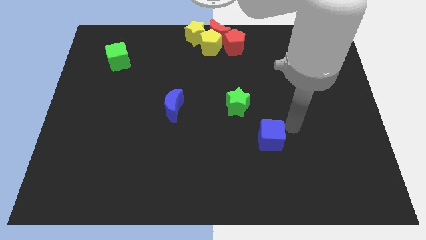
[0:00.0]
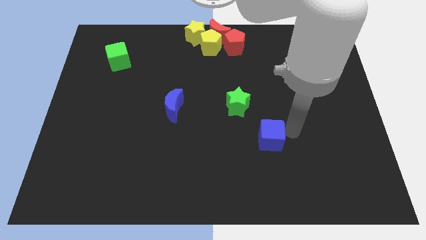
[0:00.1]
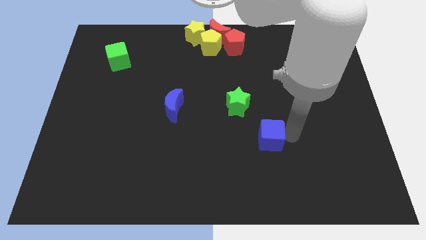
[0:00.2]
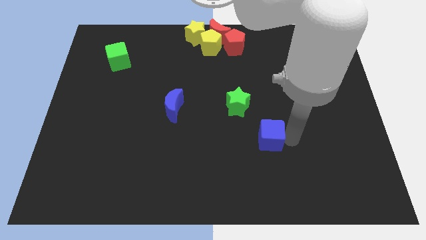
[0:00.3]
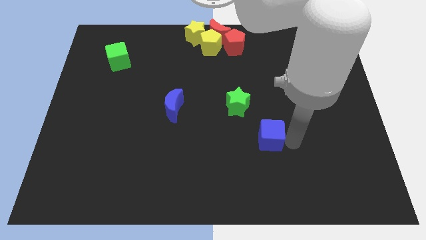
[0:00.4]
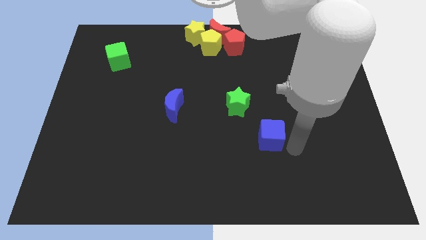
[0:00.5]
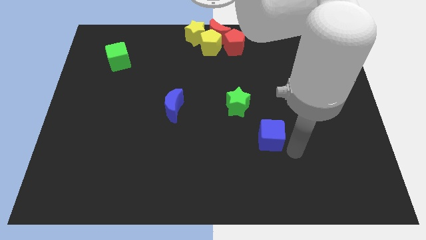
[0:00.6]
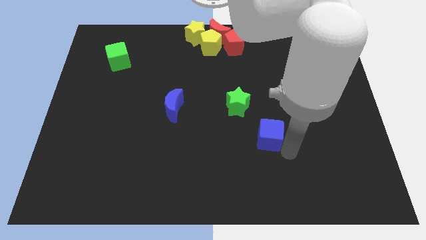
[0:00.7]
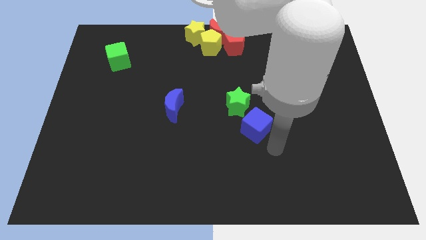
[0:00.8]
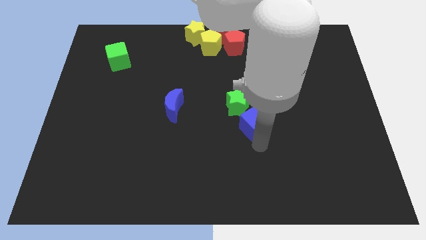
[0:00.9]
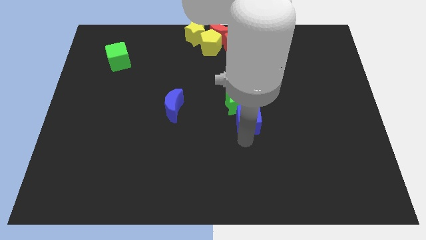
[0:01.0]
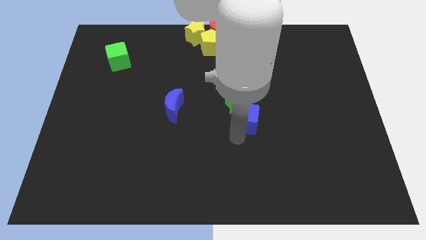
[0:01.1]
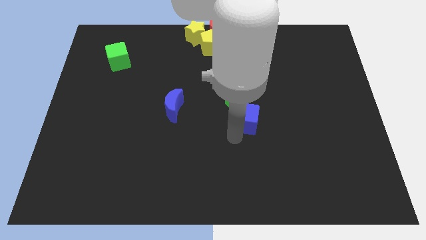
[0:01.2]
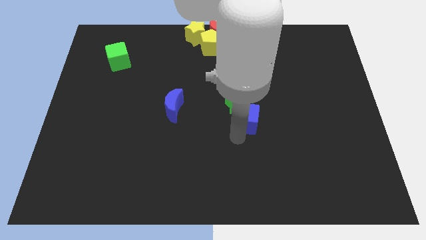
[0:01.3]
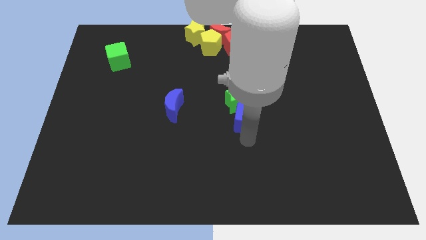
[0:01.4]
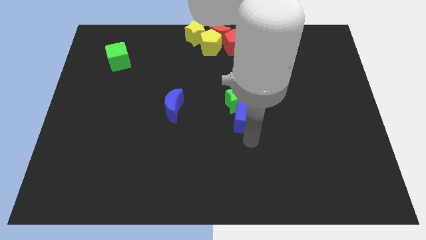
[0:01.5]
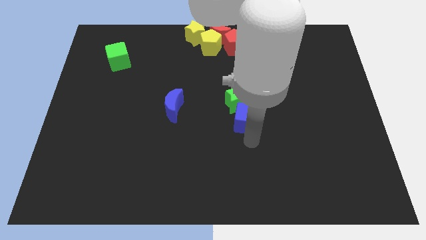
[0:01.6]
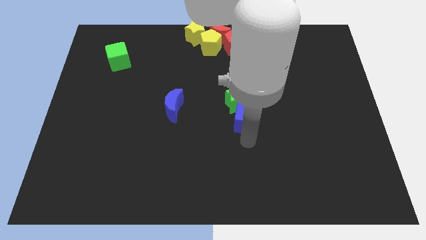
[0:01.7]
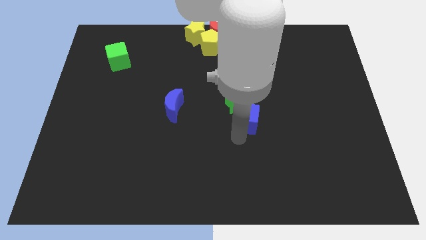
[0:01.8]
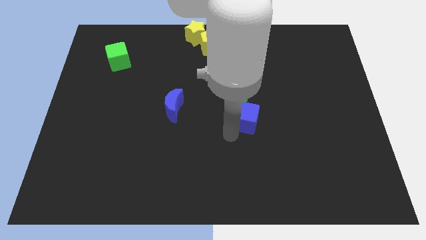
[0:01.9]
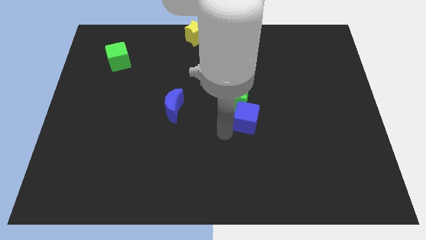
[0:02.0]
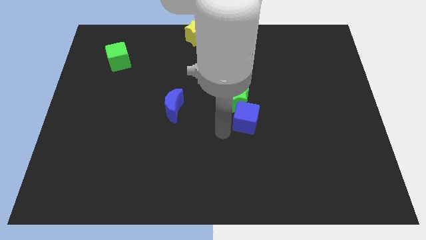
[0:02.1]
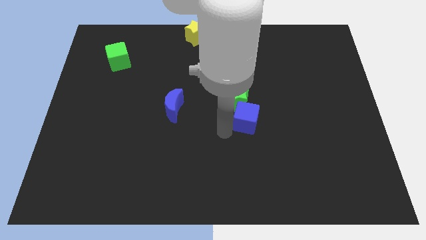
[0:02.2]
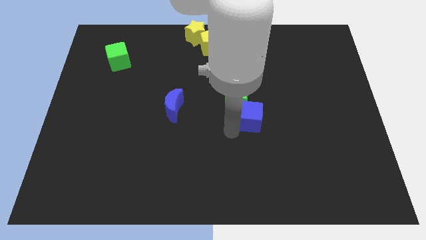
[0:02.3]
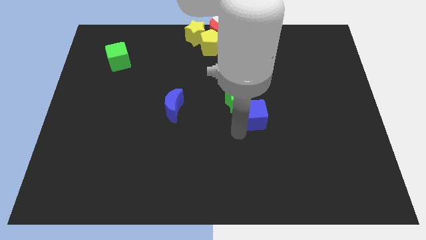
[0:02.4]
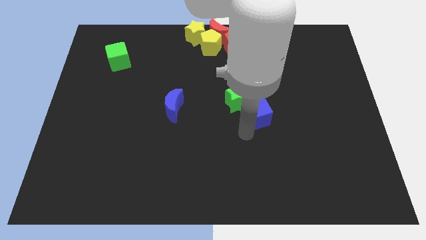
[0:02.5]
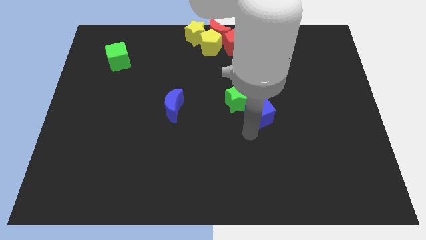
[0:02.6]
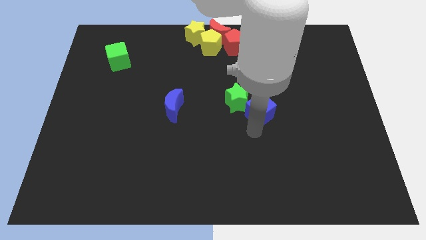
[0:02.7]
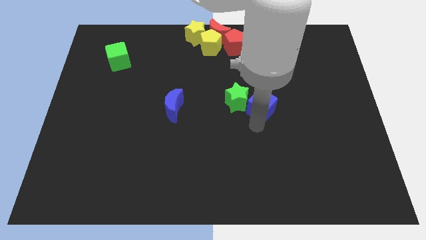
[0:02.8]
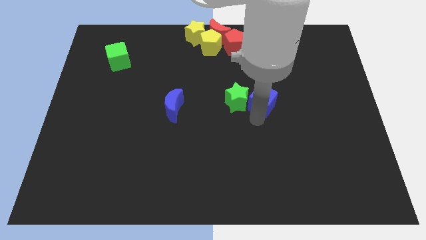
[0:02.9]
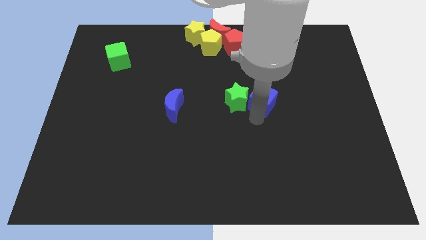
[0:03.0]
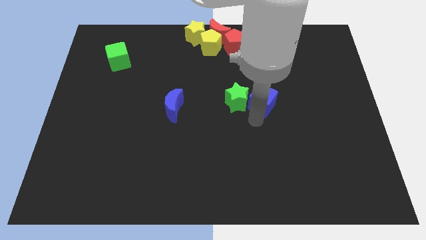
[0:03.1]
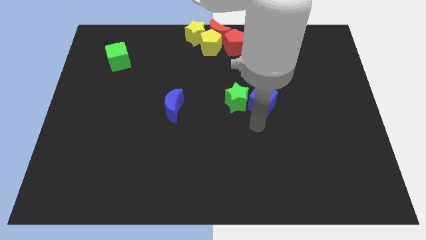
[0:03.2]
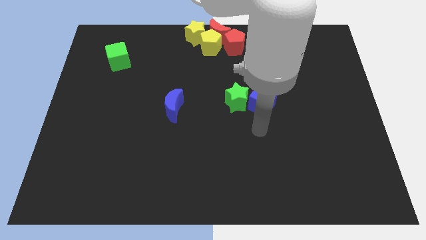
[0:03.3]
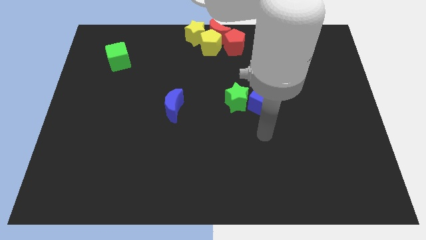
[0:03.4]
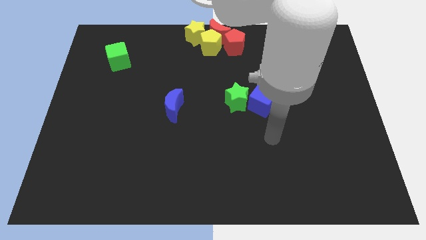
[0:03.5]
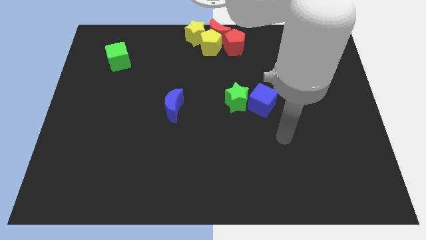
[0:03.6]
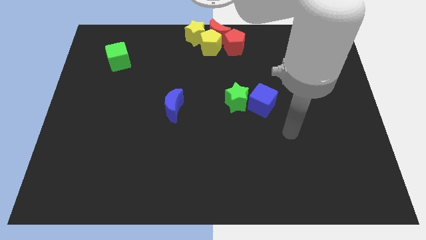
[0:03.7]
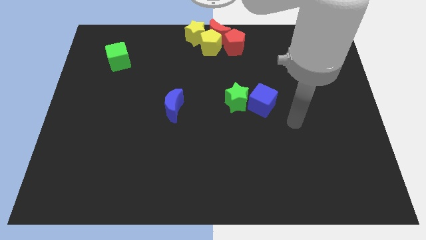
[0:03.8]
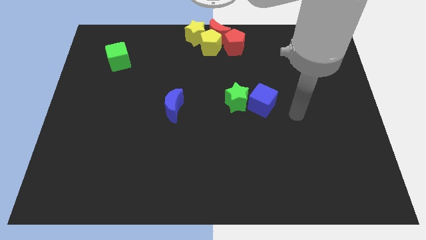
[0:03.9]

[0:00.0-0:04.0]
put the blue cube parallel right to the green star

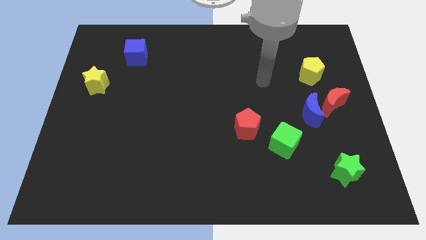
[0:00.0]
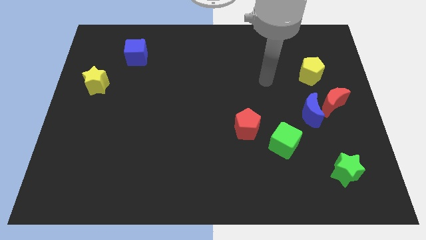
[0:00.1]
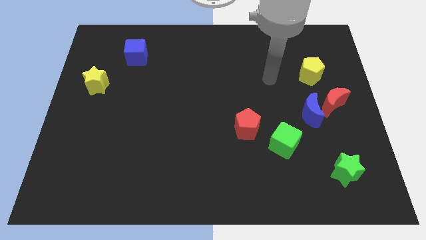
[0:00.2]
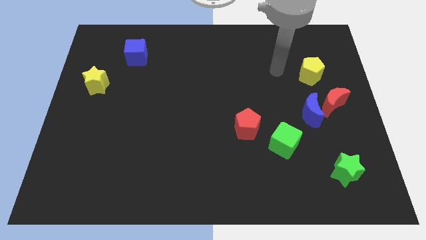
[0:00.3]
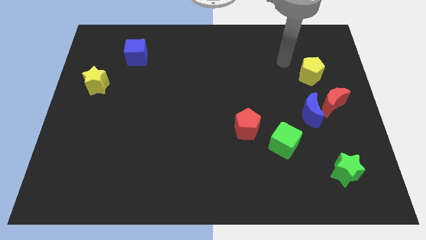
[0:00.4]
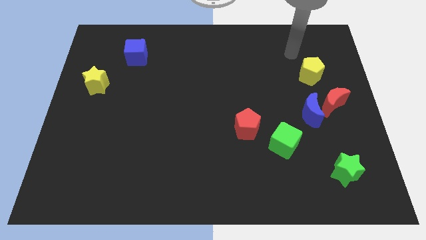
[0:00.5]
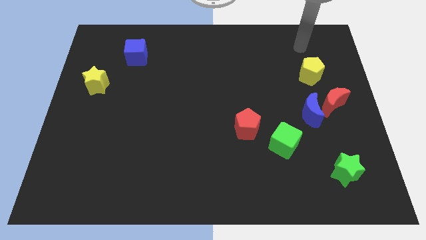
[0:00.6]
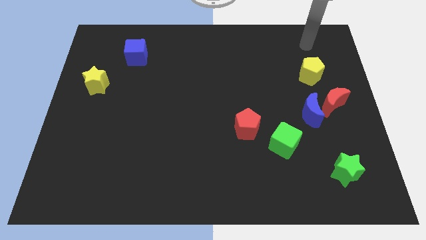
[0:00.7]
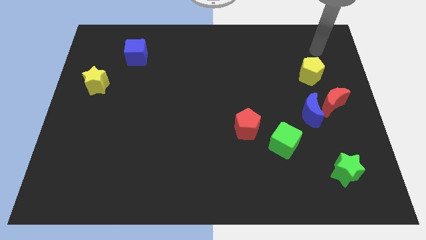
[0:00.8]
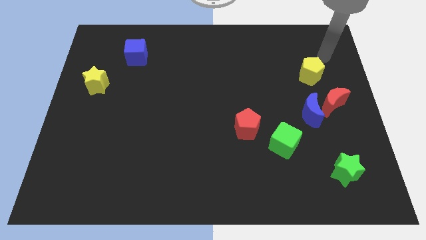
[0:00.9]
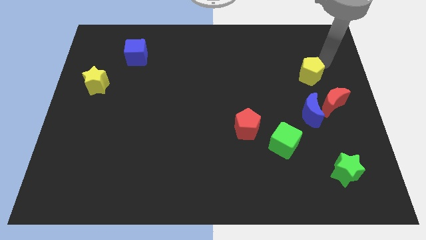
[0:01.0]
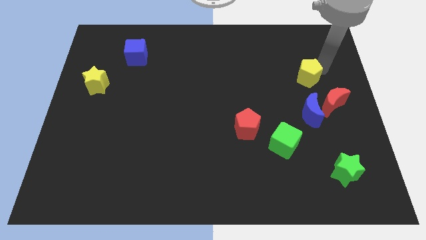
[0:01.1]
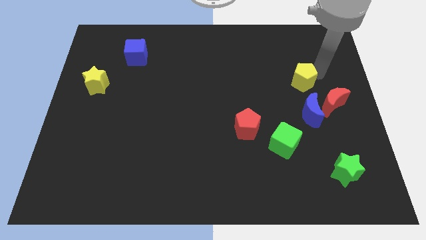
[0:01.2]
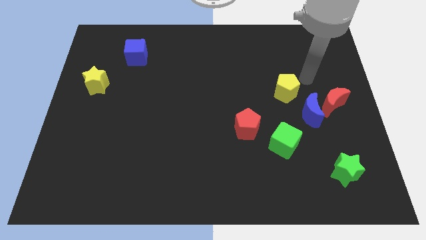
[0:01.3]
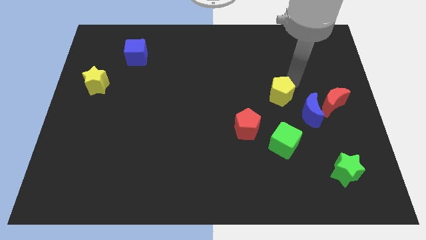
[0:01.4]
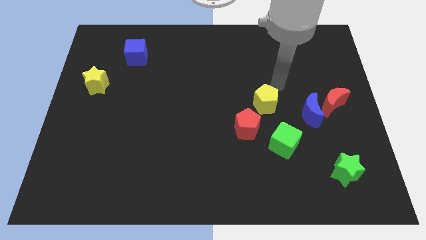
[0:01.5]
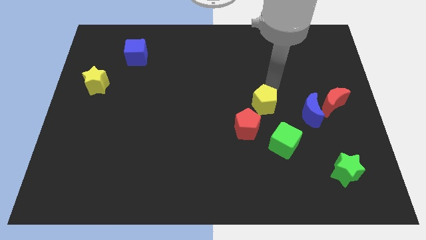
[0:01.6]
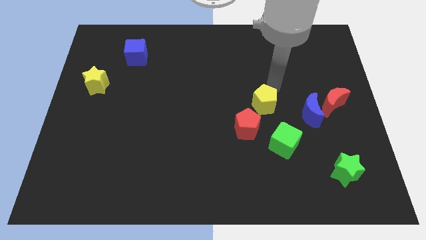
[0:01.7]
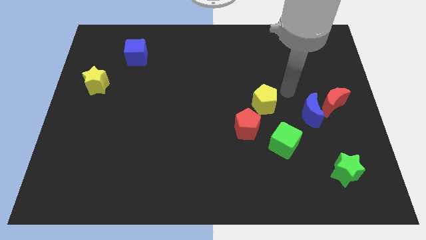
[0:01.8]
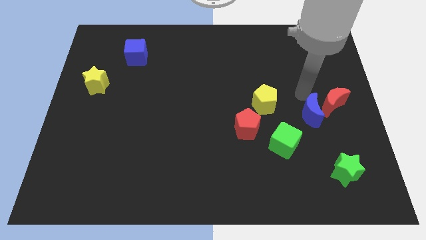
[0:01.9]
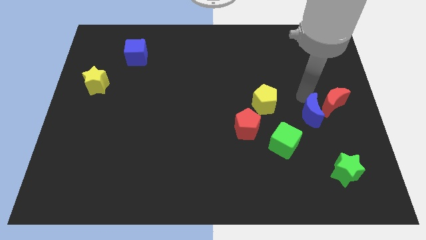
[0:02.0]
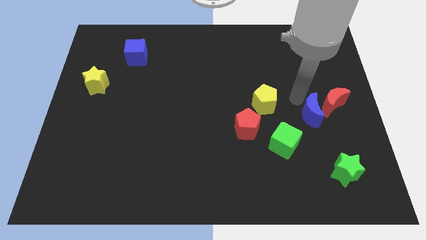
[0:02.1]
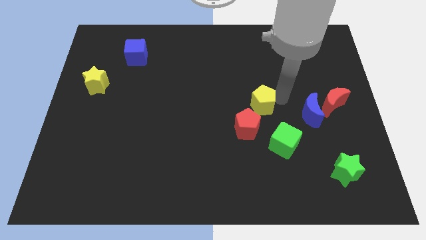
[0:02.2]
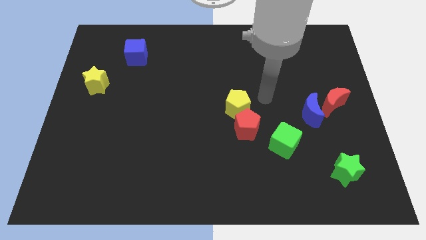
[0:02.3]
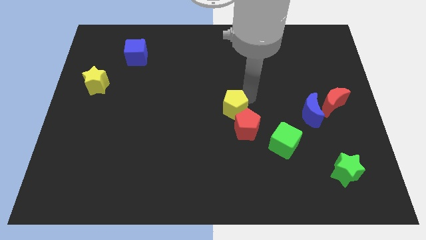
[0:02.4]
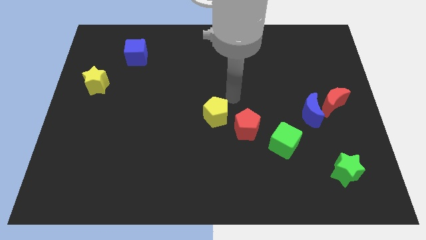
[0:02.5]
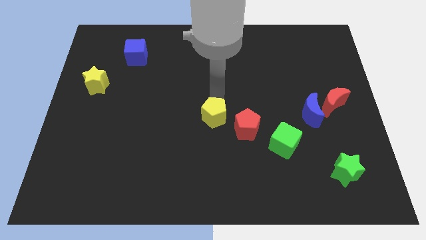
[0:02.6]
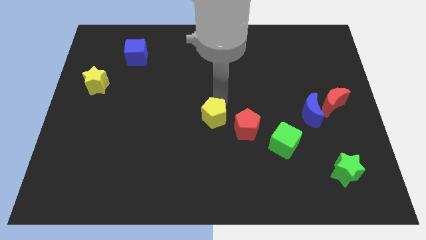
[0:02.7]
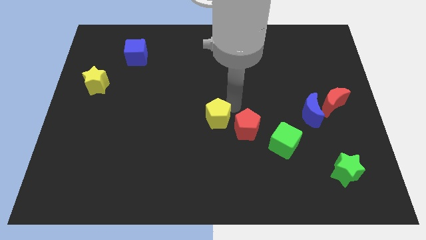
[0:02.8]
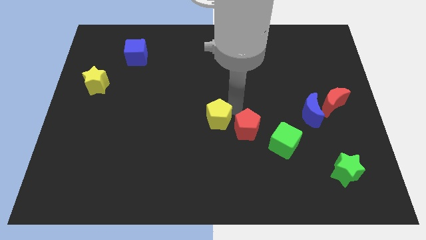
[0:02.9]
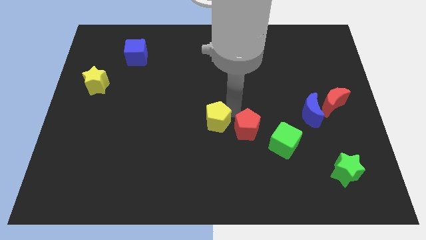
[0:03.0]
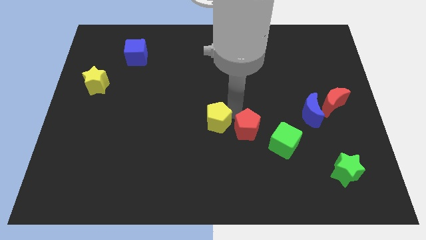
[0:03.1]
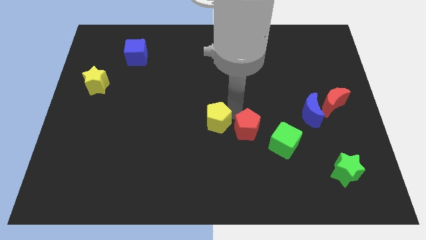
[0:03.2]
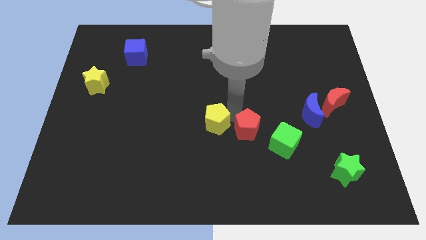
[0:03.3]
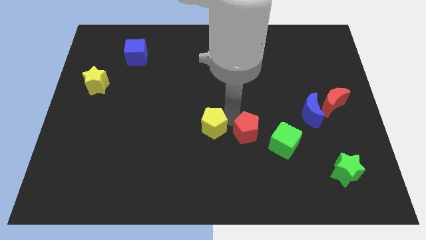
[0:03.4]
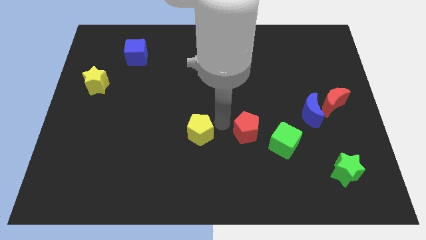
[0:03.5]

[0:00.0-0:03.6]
put the yellow pentagon left to the red pentagon

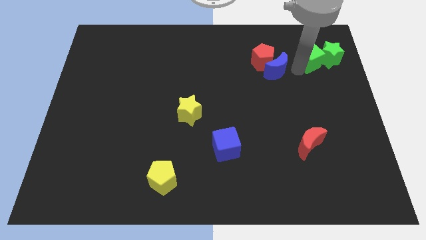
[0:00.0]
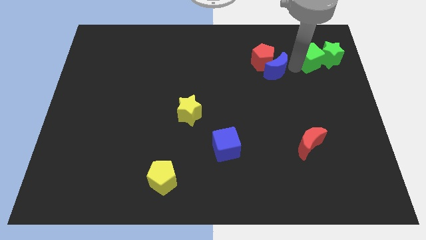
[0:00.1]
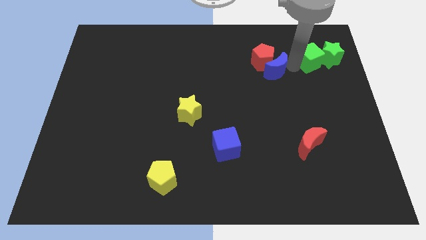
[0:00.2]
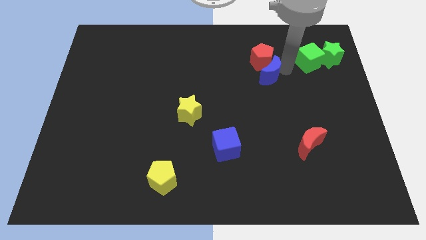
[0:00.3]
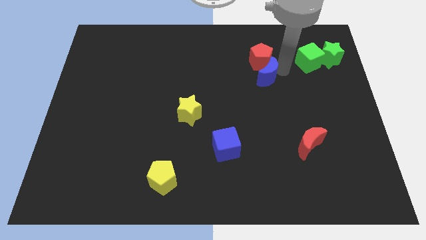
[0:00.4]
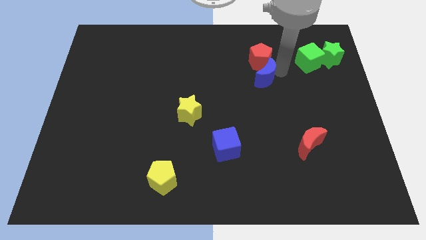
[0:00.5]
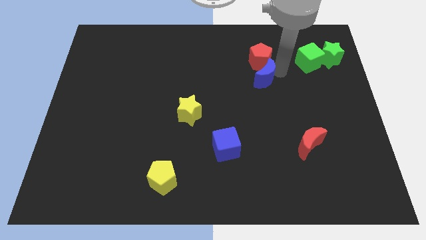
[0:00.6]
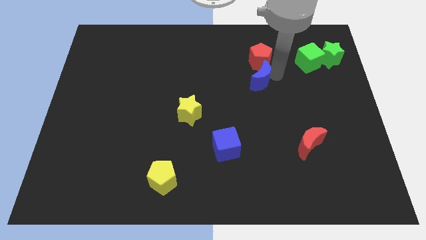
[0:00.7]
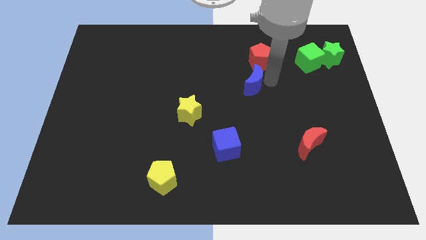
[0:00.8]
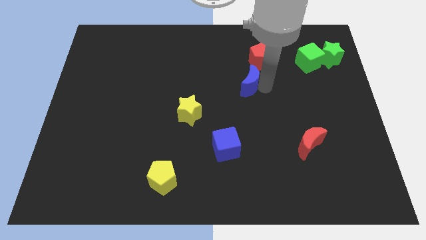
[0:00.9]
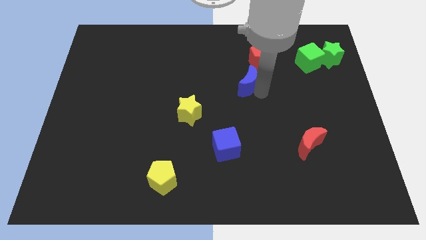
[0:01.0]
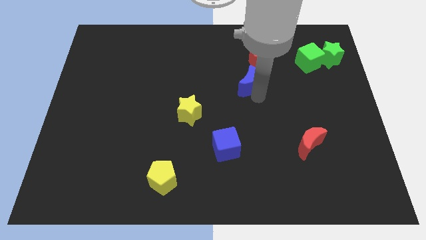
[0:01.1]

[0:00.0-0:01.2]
slide blue moon to the left side
